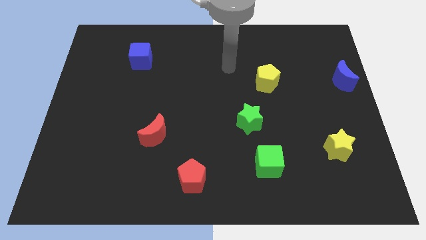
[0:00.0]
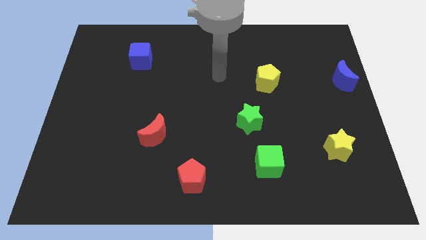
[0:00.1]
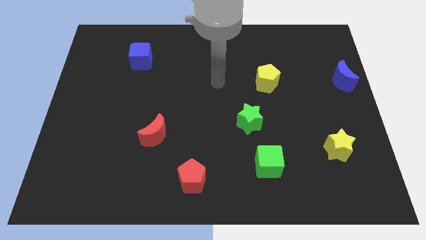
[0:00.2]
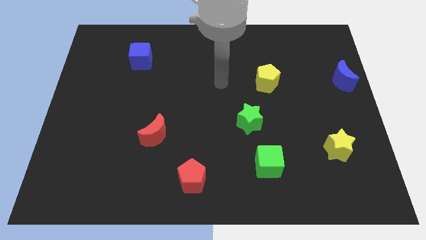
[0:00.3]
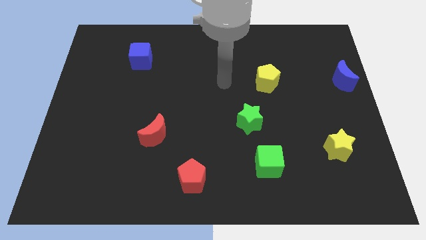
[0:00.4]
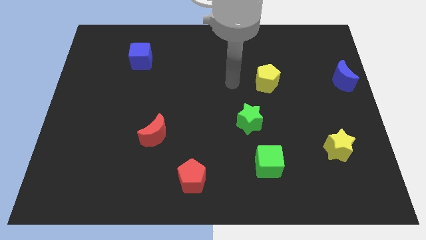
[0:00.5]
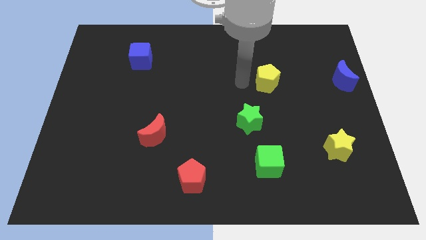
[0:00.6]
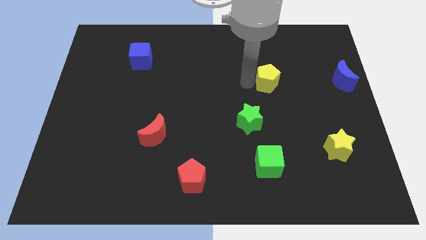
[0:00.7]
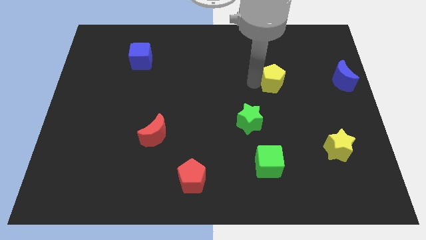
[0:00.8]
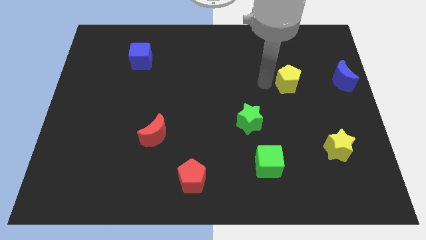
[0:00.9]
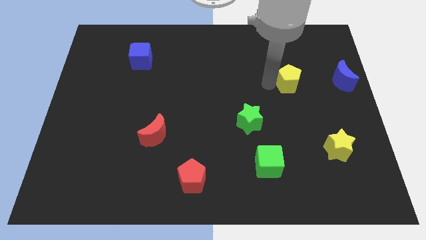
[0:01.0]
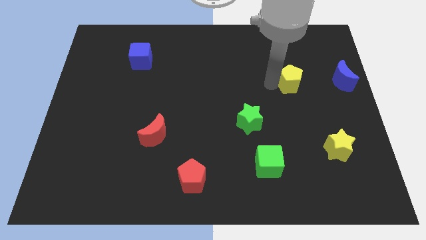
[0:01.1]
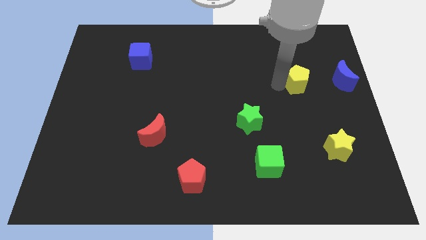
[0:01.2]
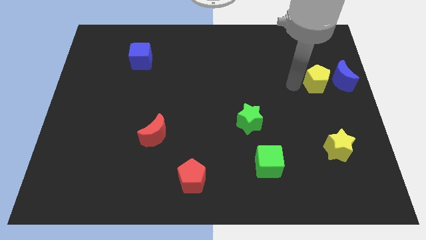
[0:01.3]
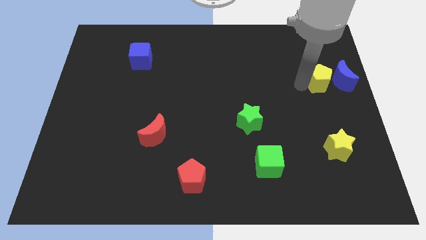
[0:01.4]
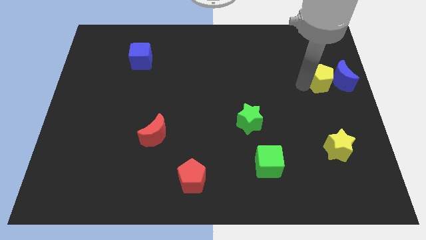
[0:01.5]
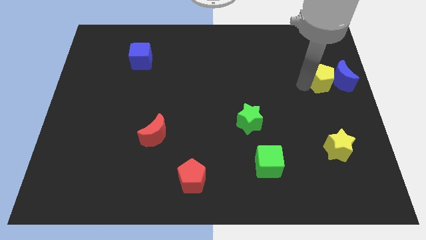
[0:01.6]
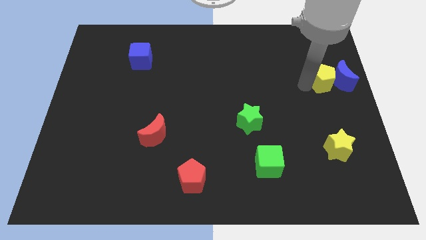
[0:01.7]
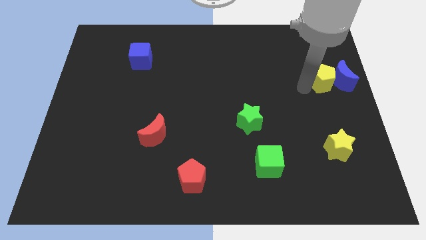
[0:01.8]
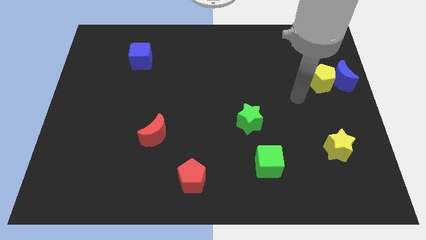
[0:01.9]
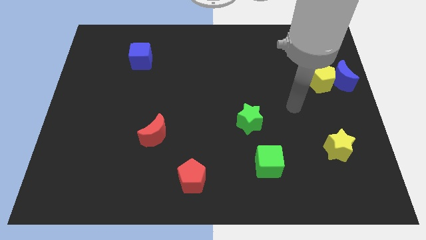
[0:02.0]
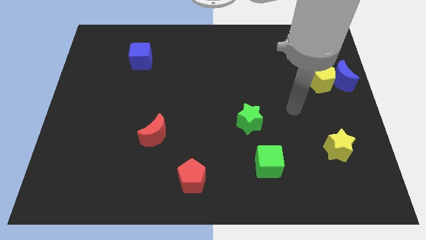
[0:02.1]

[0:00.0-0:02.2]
push the yellow pentagon close to the blue moon

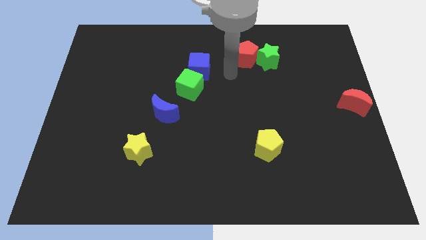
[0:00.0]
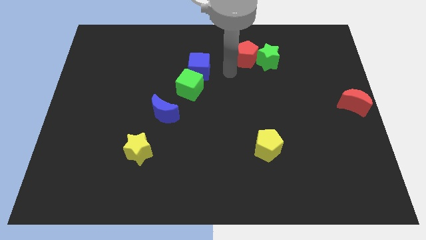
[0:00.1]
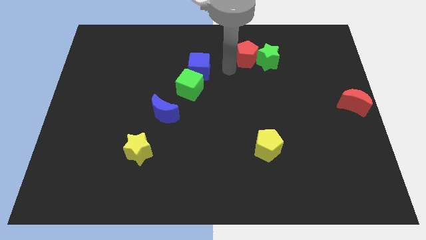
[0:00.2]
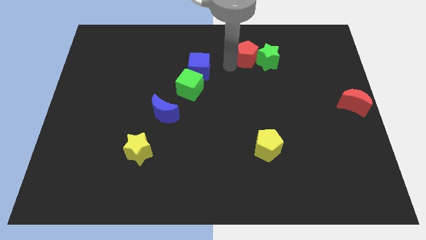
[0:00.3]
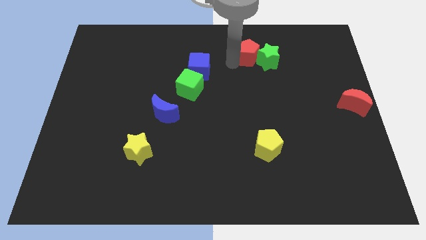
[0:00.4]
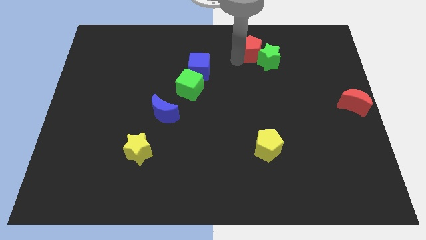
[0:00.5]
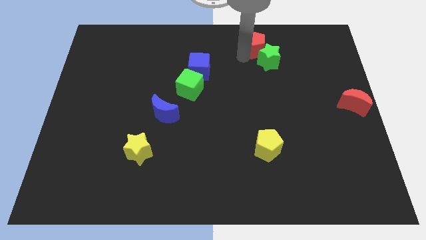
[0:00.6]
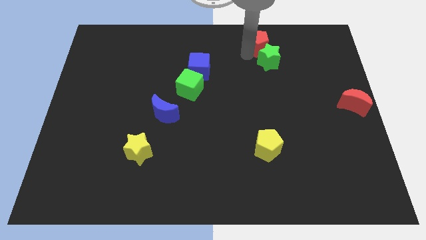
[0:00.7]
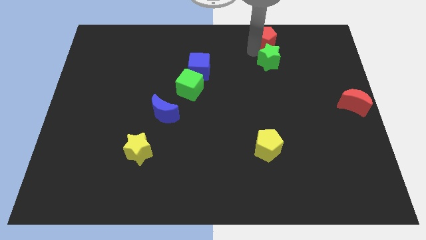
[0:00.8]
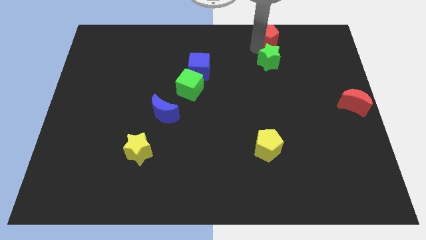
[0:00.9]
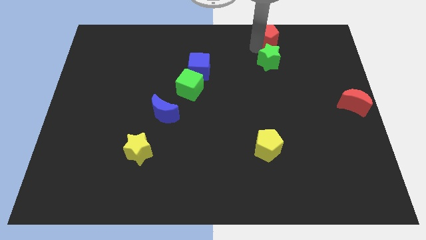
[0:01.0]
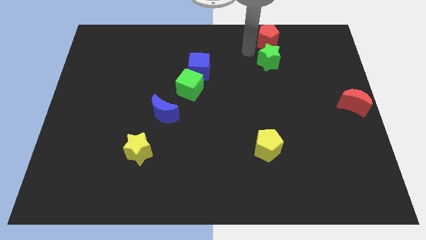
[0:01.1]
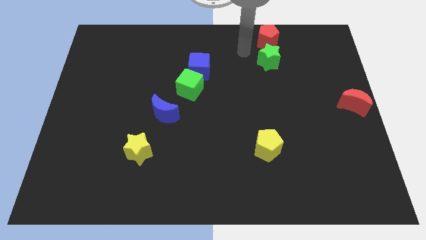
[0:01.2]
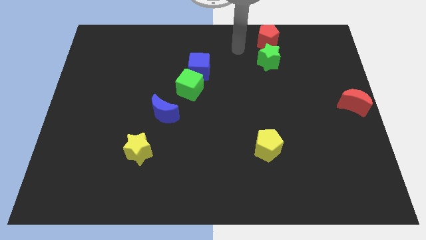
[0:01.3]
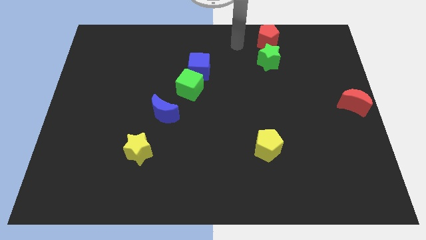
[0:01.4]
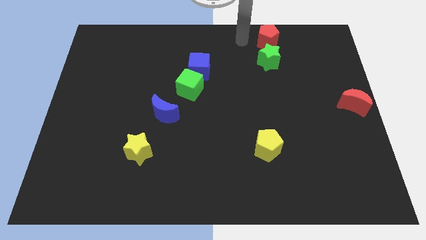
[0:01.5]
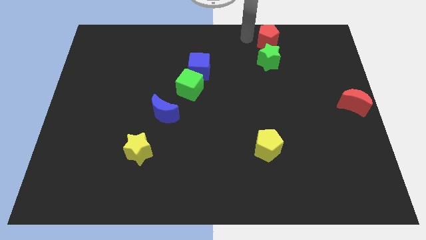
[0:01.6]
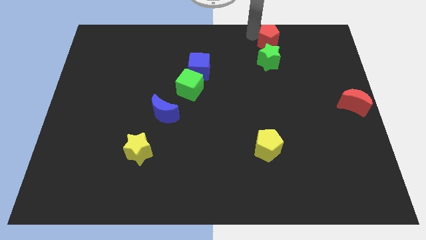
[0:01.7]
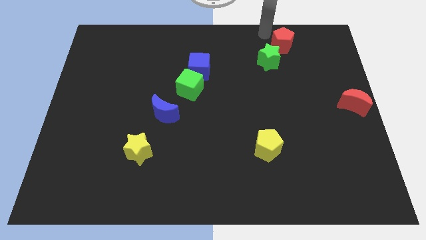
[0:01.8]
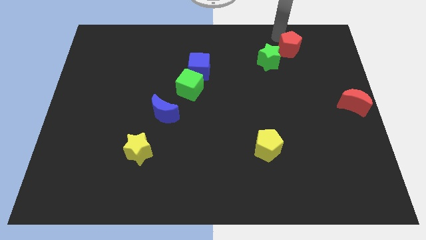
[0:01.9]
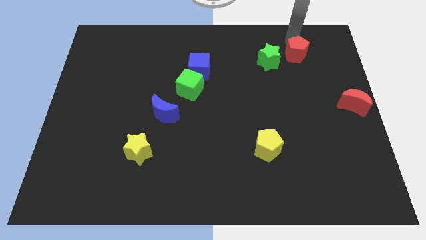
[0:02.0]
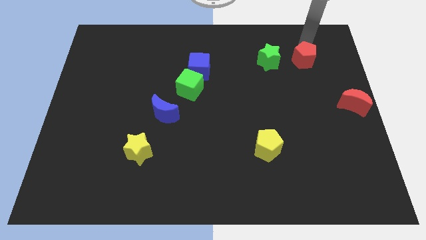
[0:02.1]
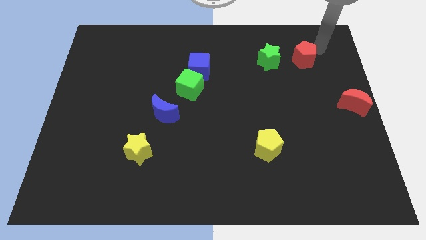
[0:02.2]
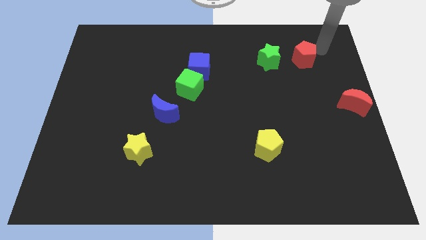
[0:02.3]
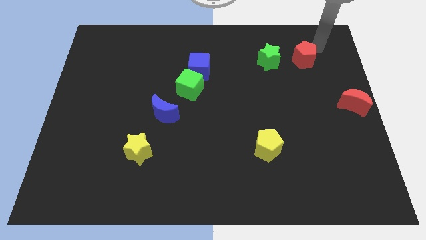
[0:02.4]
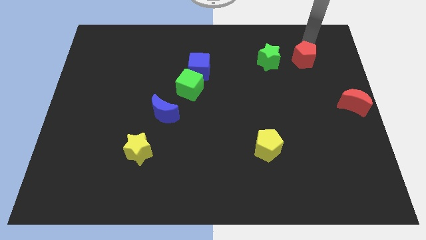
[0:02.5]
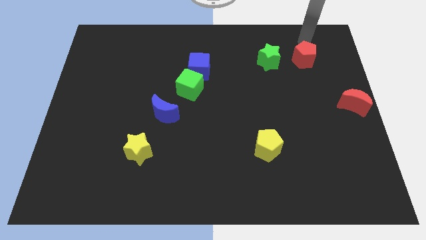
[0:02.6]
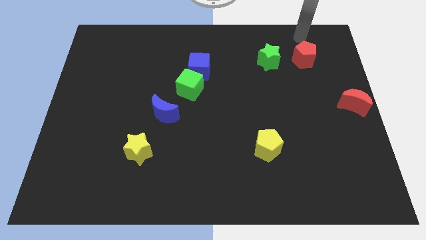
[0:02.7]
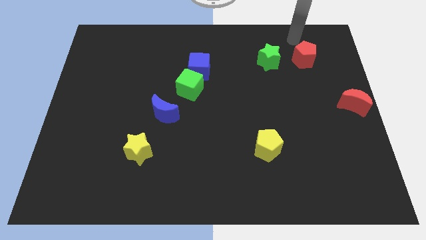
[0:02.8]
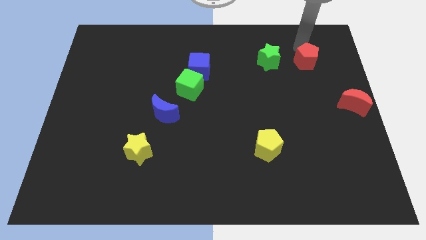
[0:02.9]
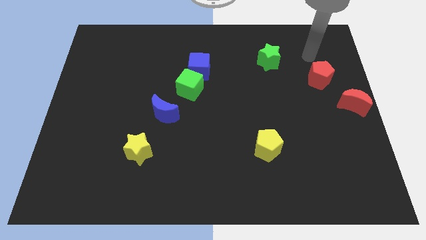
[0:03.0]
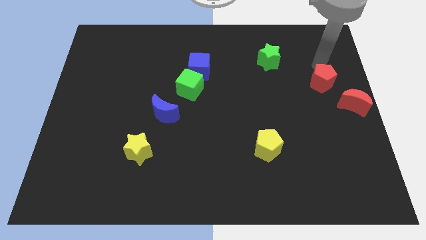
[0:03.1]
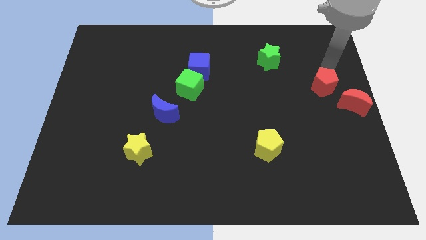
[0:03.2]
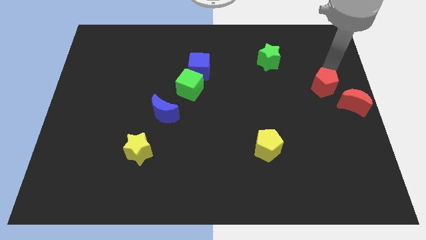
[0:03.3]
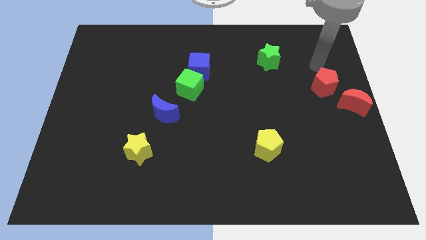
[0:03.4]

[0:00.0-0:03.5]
separate red pentagon from green star

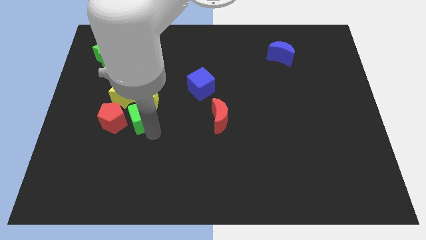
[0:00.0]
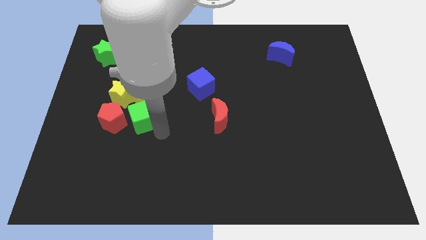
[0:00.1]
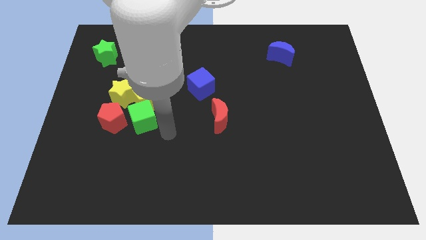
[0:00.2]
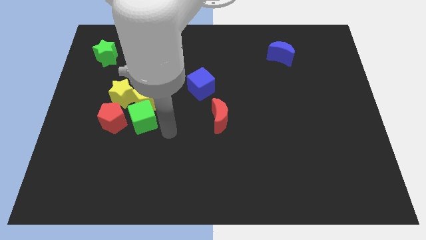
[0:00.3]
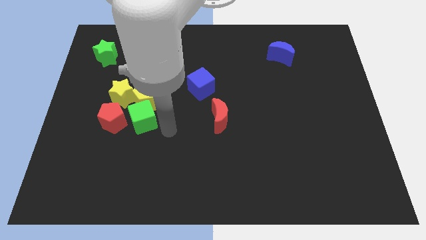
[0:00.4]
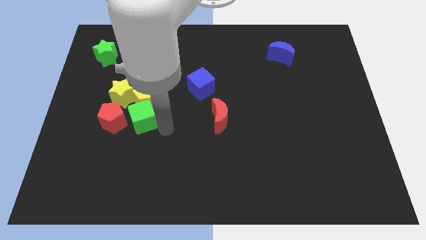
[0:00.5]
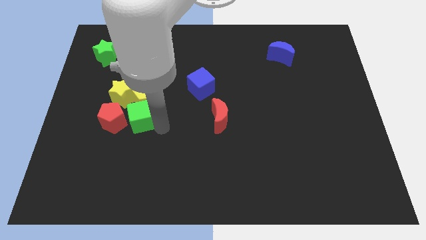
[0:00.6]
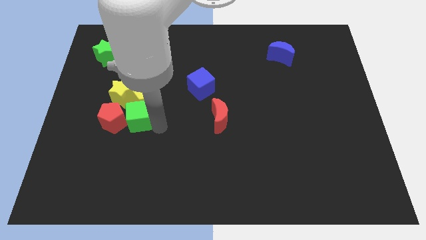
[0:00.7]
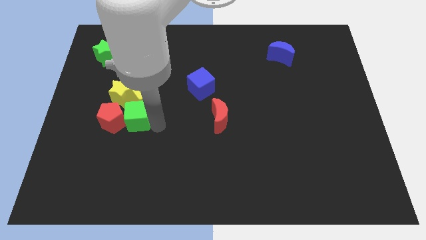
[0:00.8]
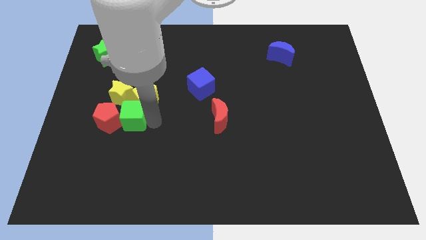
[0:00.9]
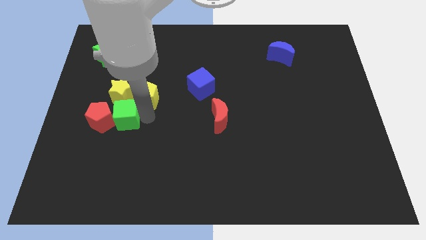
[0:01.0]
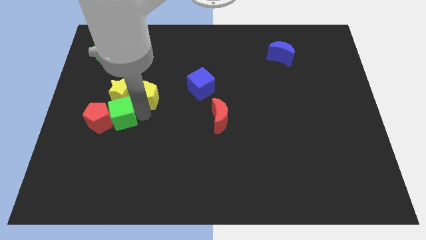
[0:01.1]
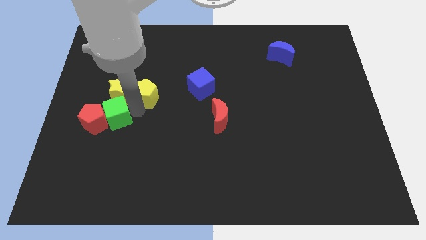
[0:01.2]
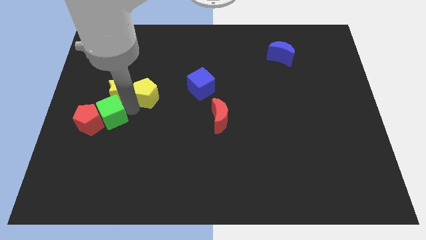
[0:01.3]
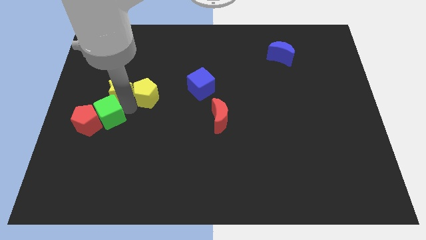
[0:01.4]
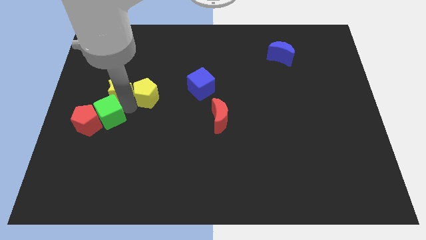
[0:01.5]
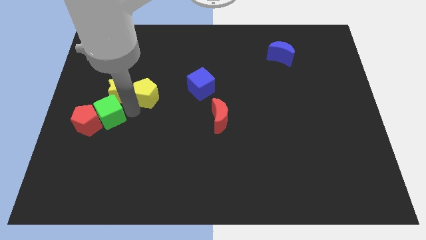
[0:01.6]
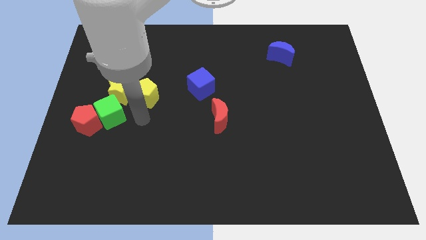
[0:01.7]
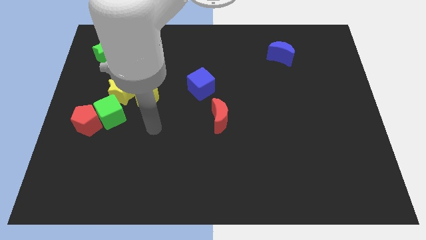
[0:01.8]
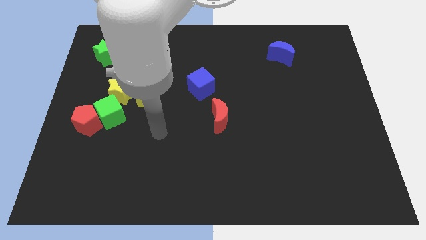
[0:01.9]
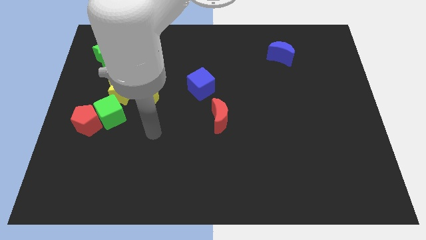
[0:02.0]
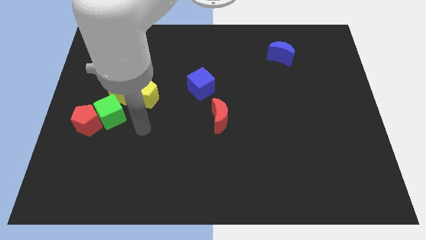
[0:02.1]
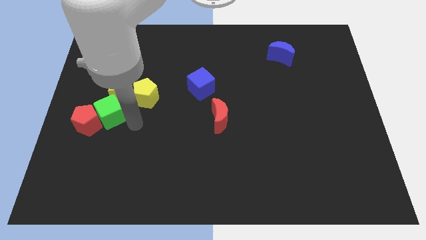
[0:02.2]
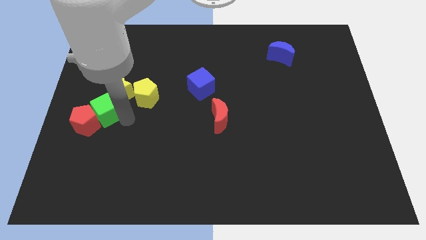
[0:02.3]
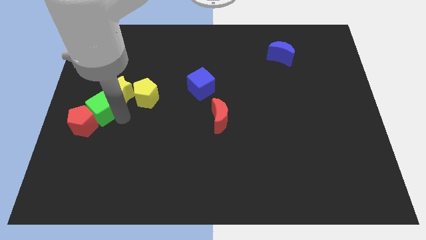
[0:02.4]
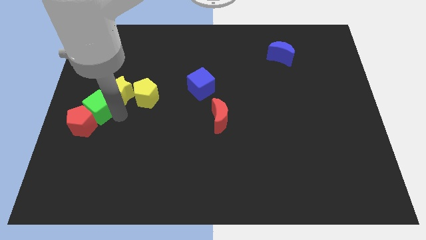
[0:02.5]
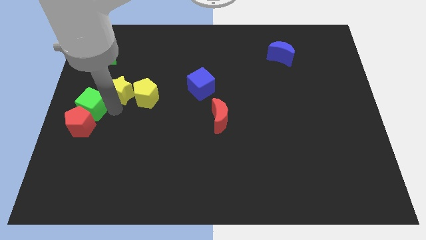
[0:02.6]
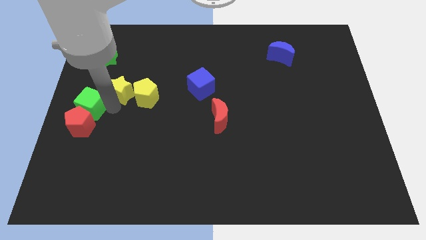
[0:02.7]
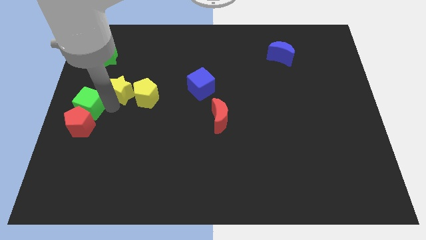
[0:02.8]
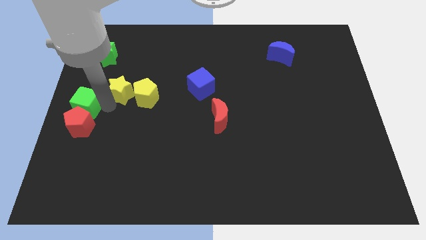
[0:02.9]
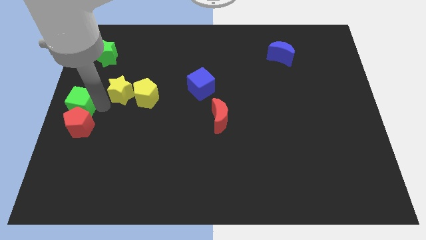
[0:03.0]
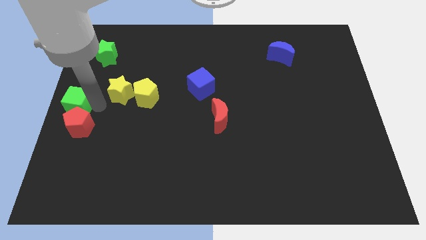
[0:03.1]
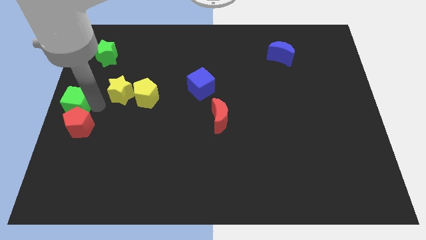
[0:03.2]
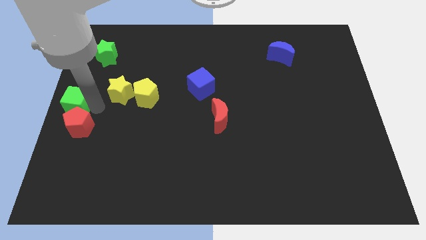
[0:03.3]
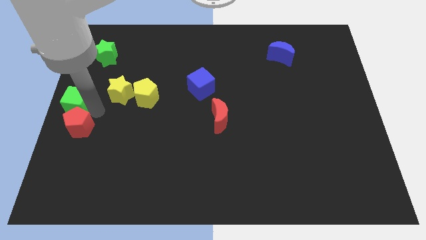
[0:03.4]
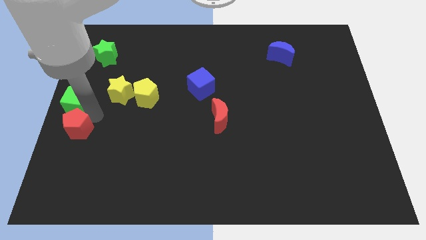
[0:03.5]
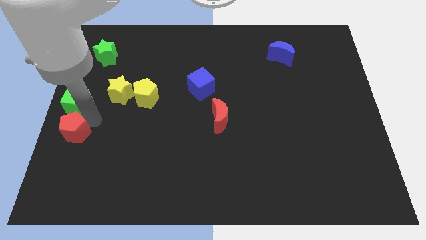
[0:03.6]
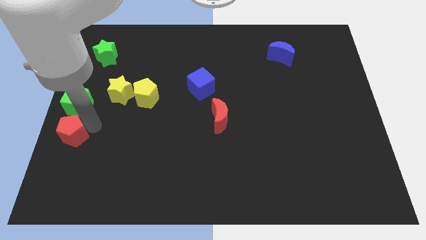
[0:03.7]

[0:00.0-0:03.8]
drag green cube towards middle left side of the board
